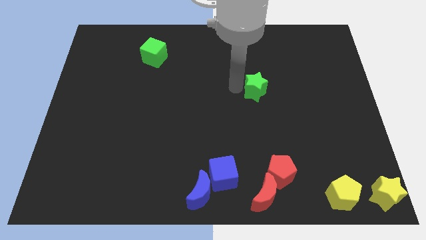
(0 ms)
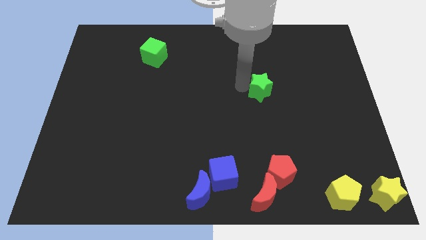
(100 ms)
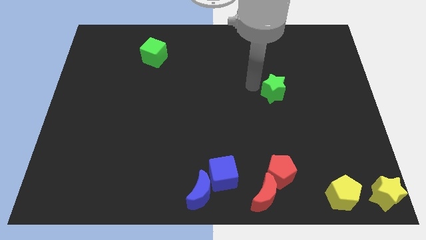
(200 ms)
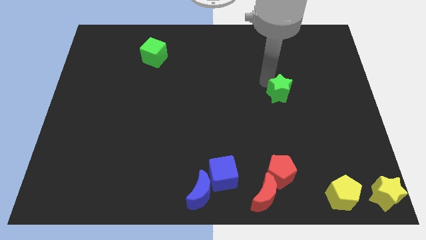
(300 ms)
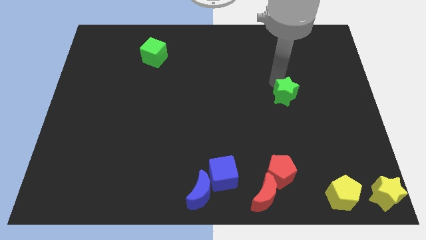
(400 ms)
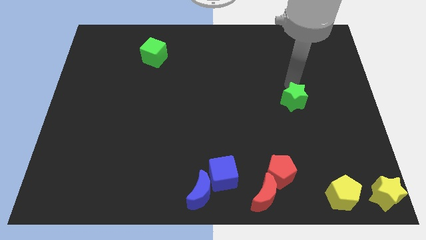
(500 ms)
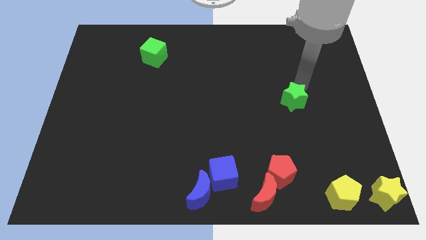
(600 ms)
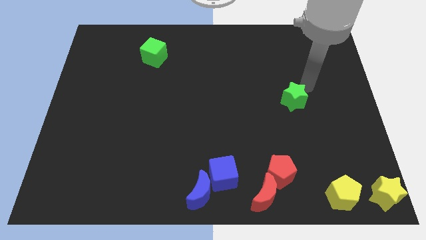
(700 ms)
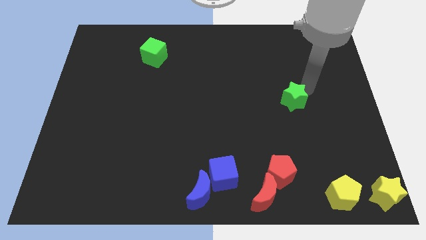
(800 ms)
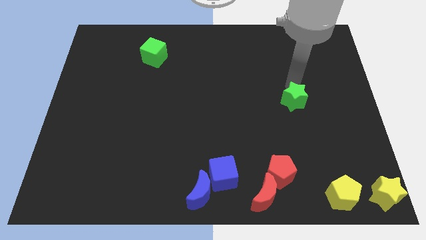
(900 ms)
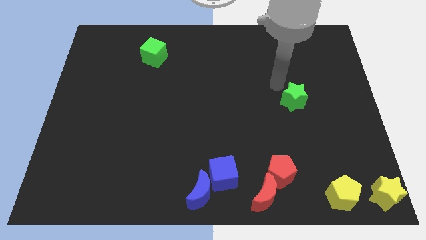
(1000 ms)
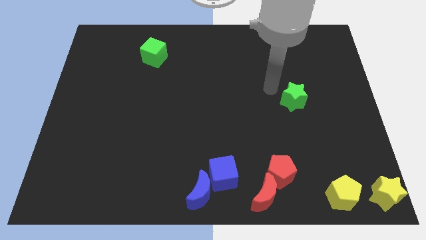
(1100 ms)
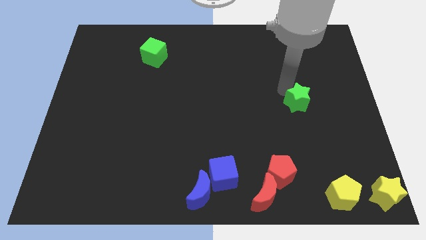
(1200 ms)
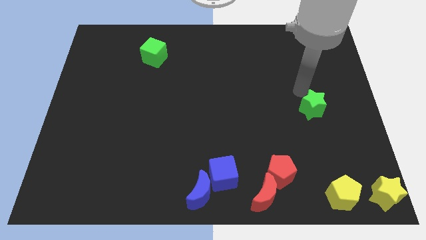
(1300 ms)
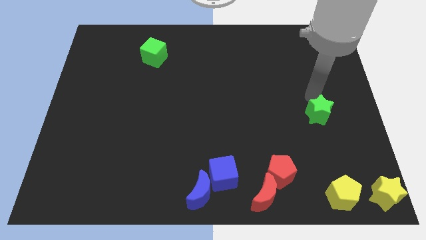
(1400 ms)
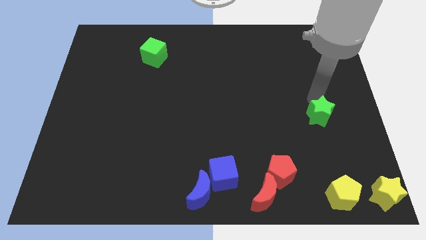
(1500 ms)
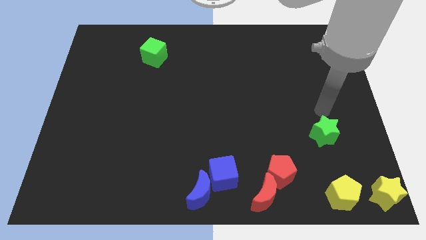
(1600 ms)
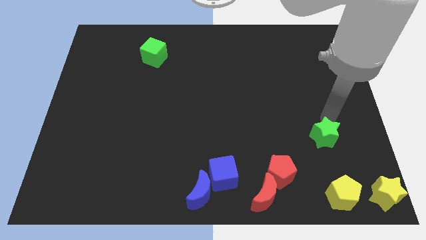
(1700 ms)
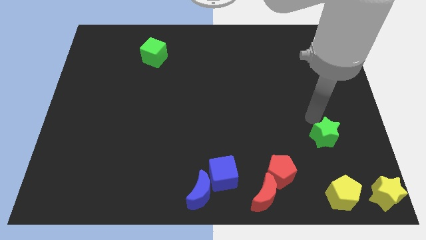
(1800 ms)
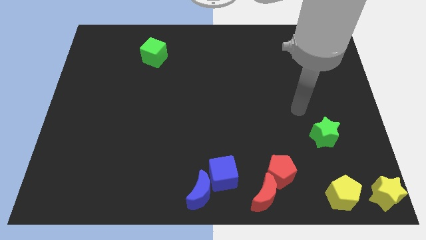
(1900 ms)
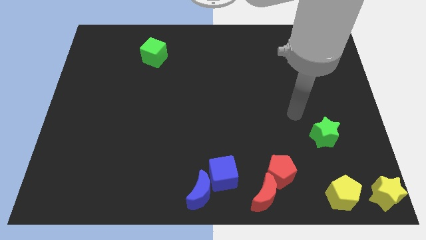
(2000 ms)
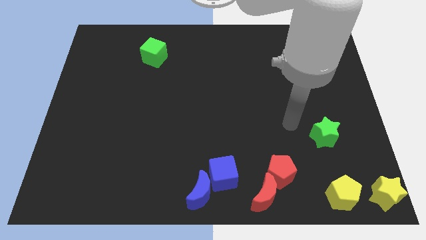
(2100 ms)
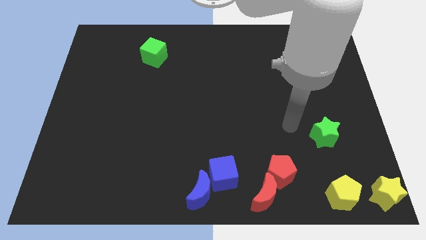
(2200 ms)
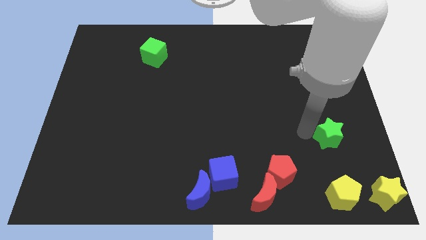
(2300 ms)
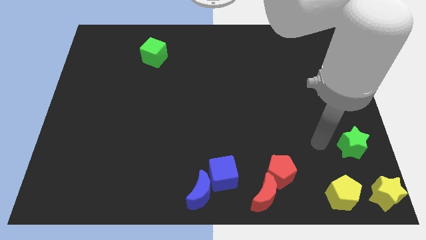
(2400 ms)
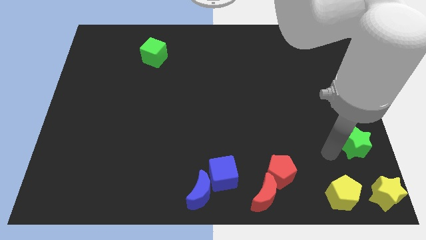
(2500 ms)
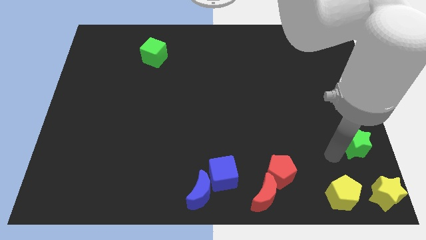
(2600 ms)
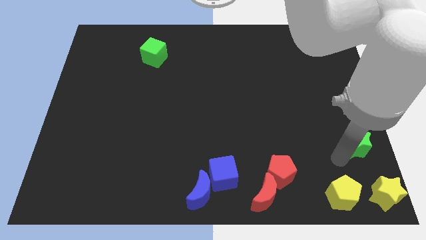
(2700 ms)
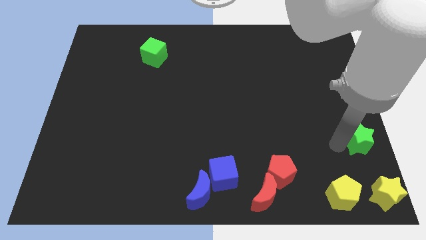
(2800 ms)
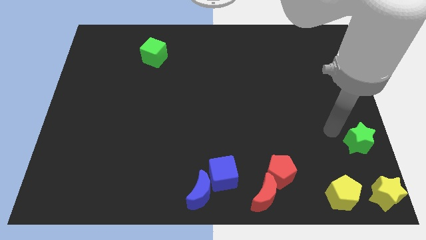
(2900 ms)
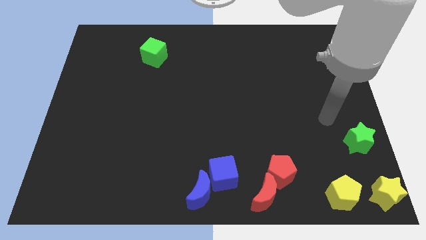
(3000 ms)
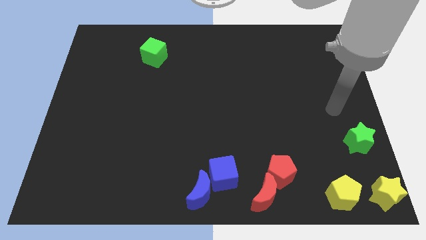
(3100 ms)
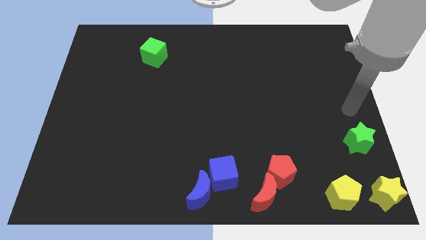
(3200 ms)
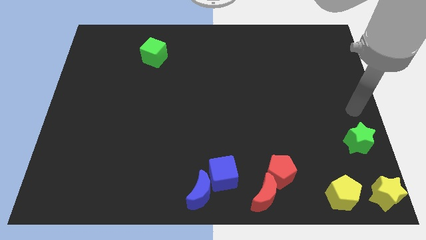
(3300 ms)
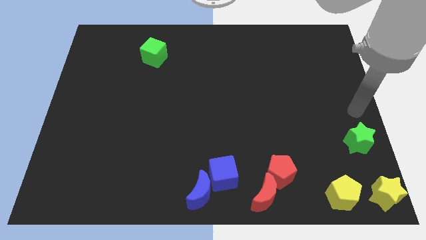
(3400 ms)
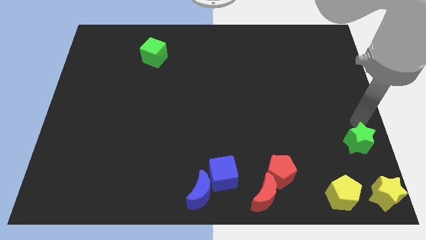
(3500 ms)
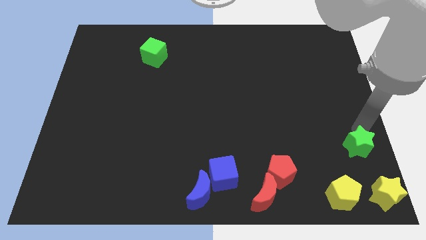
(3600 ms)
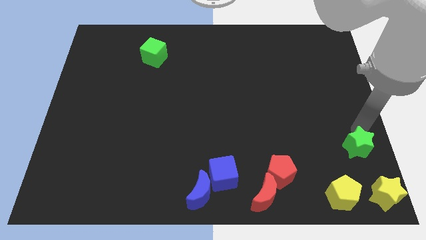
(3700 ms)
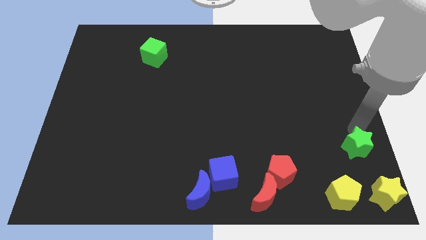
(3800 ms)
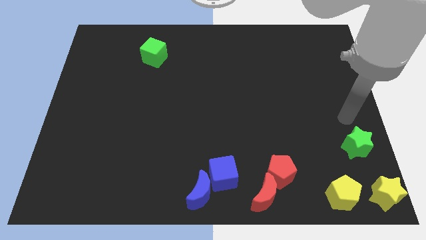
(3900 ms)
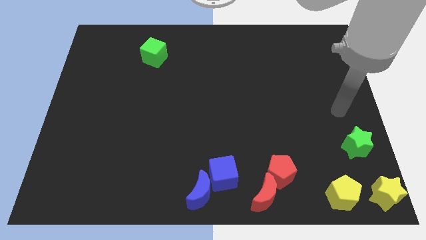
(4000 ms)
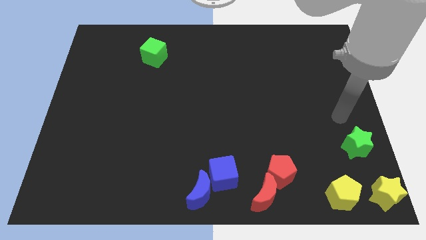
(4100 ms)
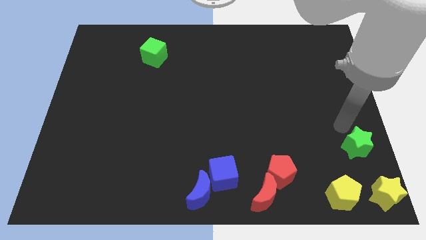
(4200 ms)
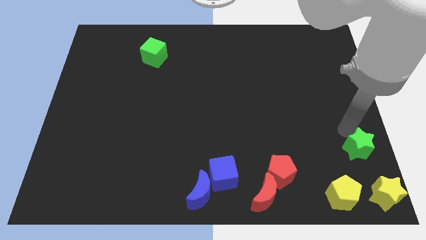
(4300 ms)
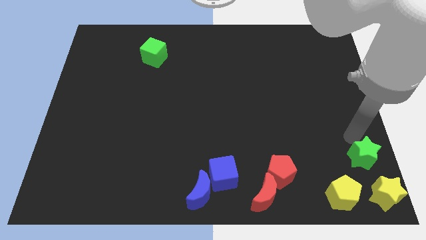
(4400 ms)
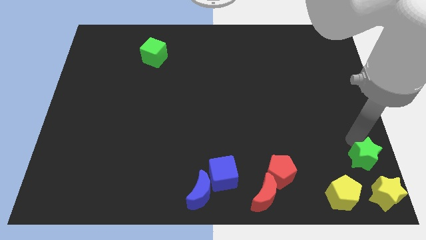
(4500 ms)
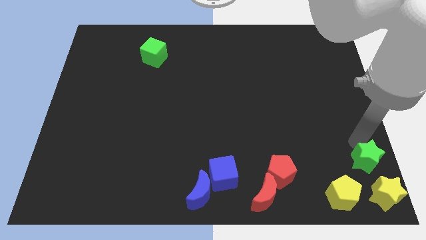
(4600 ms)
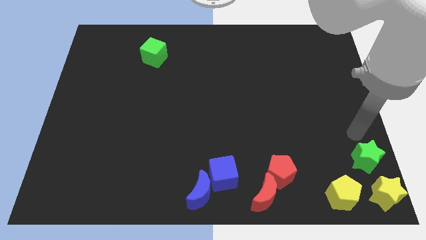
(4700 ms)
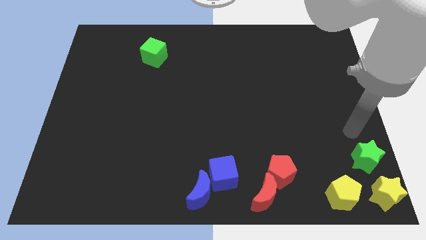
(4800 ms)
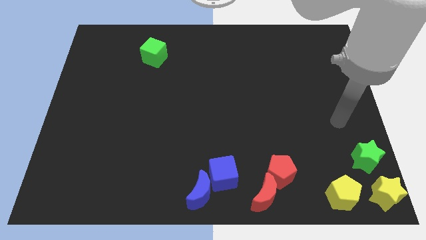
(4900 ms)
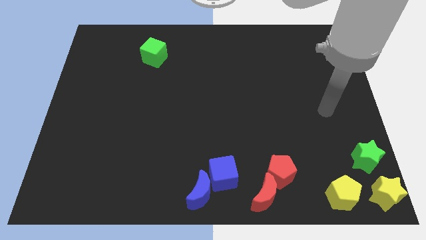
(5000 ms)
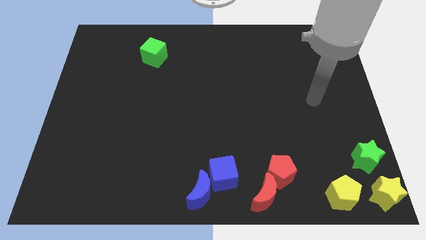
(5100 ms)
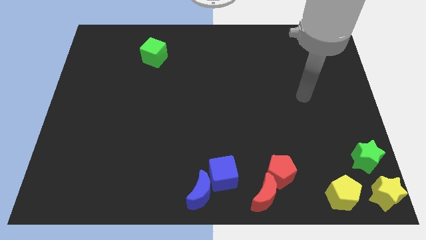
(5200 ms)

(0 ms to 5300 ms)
push the green star to the top diagonal of yellow pentagon and yellow star to form a triangle

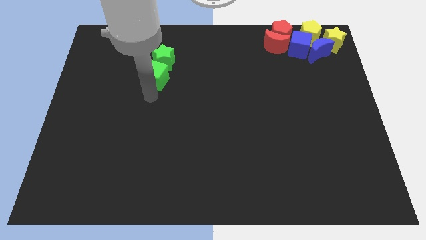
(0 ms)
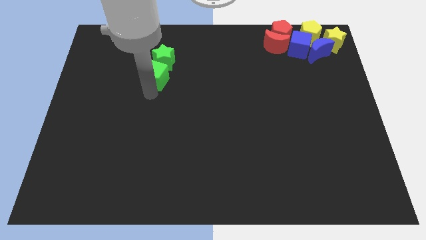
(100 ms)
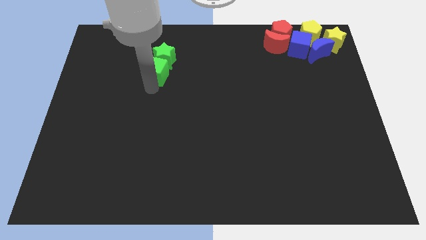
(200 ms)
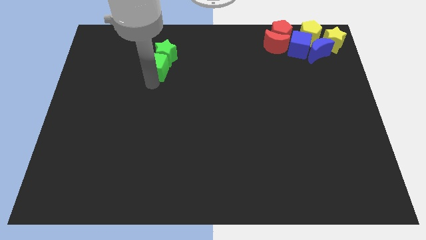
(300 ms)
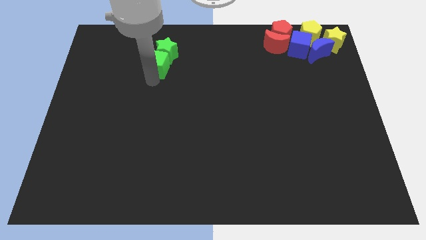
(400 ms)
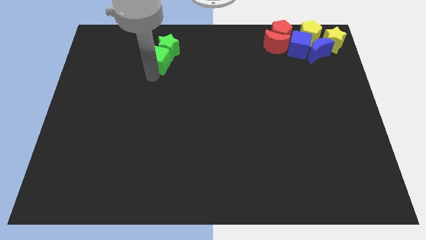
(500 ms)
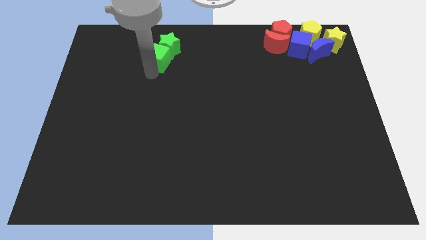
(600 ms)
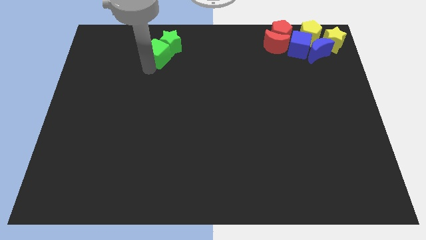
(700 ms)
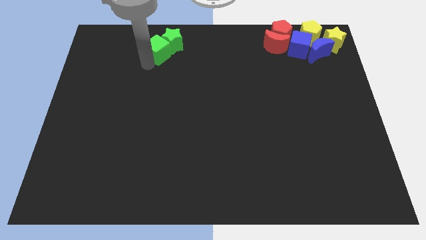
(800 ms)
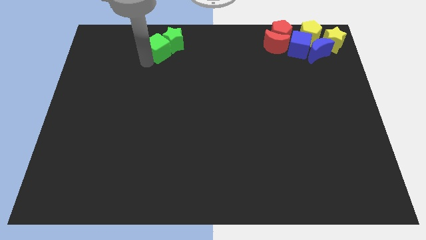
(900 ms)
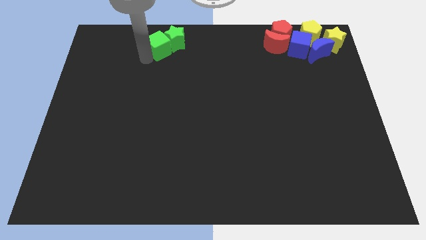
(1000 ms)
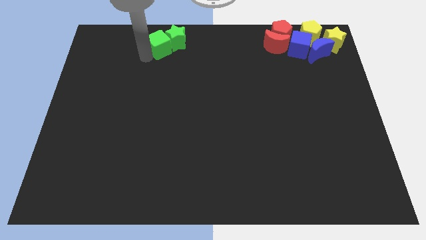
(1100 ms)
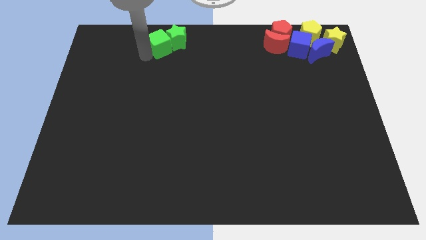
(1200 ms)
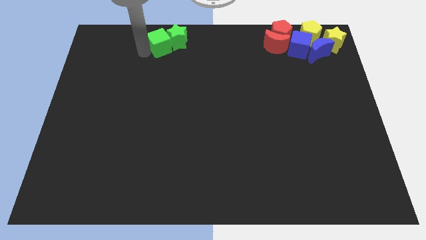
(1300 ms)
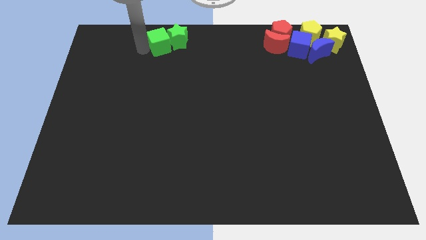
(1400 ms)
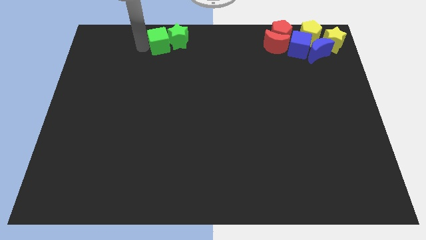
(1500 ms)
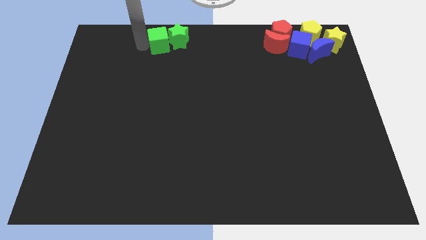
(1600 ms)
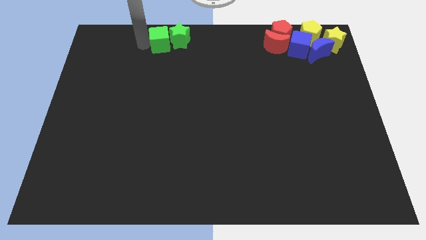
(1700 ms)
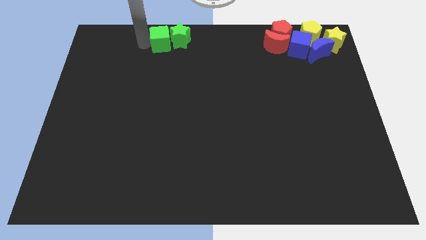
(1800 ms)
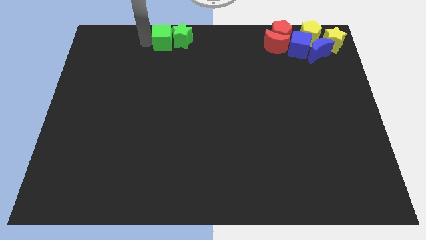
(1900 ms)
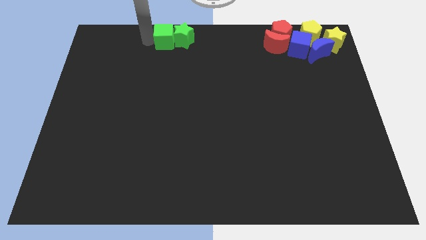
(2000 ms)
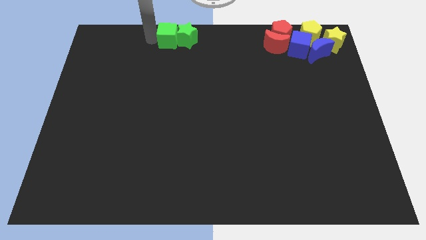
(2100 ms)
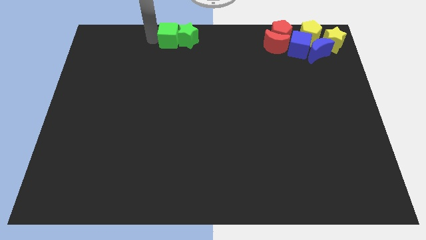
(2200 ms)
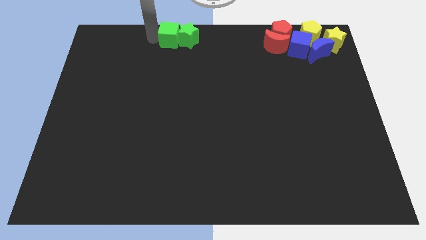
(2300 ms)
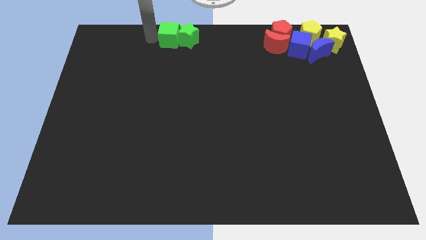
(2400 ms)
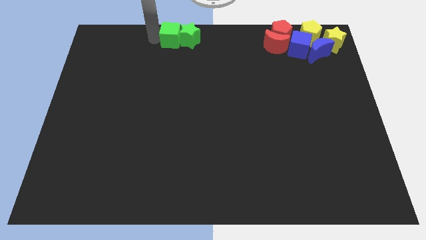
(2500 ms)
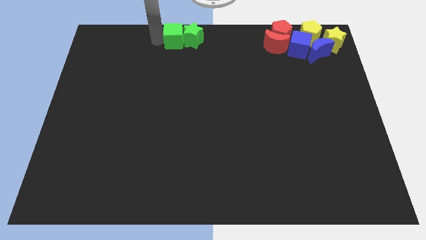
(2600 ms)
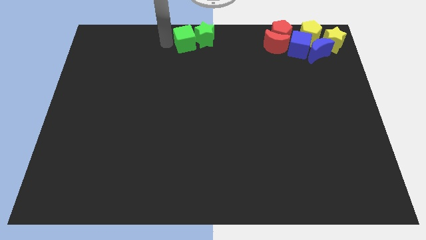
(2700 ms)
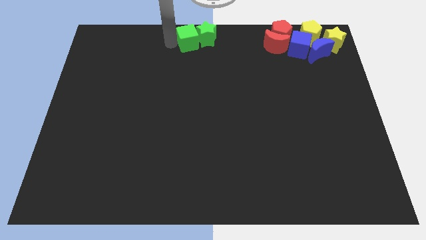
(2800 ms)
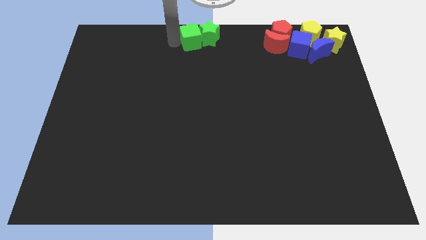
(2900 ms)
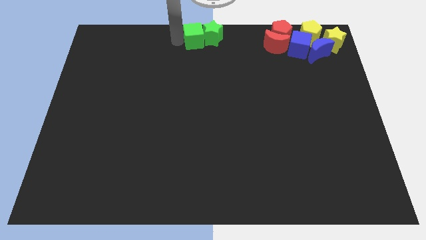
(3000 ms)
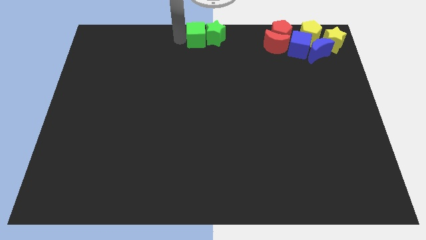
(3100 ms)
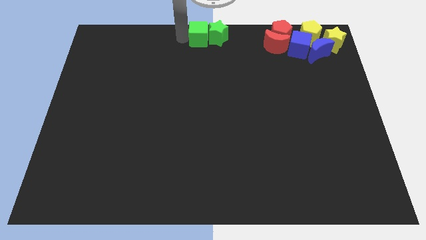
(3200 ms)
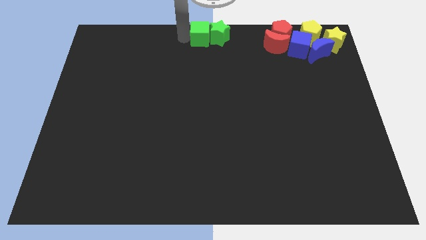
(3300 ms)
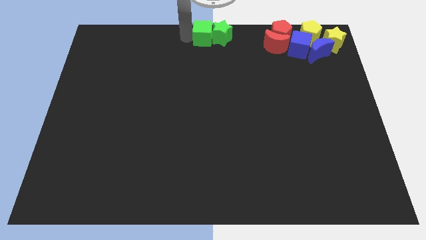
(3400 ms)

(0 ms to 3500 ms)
place the green blocks to the top middle of the board

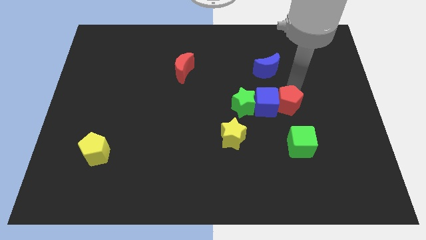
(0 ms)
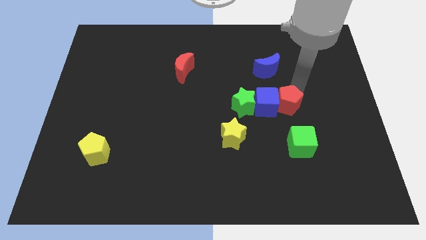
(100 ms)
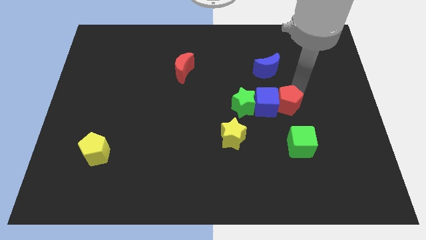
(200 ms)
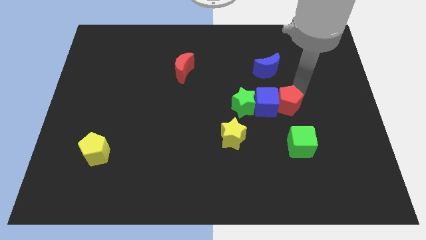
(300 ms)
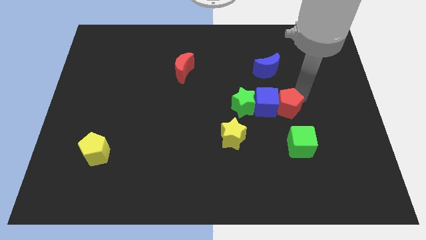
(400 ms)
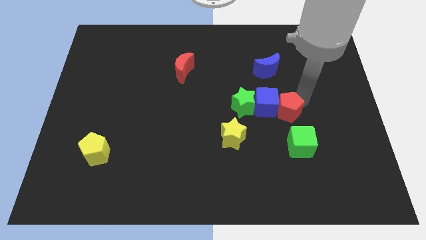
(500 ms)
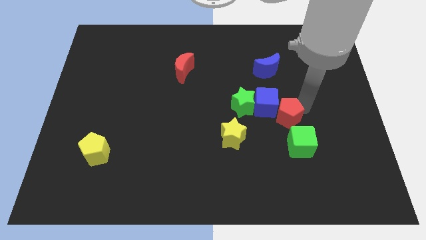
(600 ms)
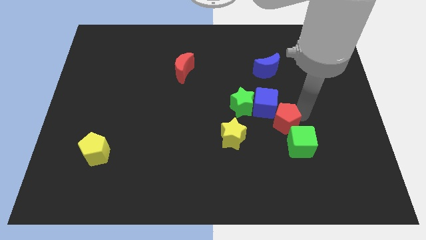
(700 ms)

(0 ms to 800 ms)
push red pentagon slightly downwards
